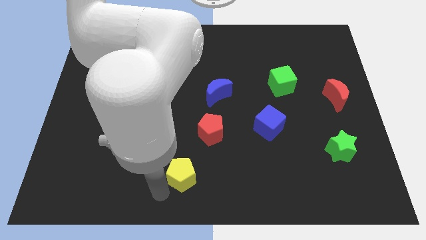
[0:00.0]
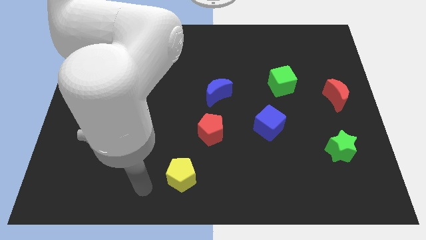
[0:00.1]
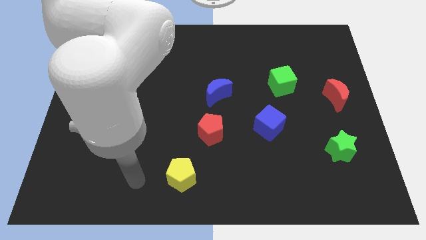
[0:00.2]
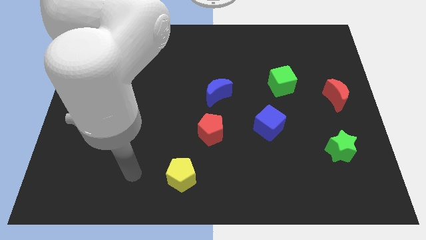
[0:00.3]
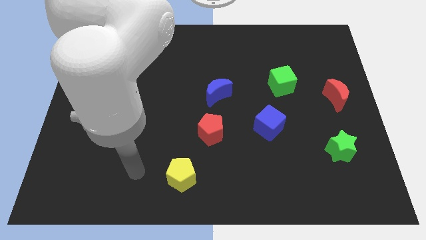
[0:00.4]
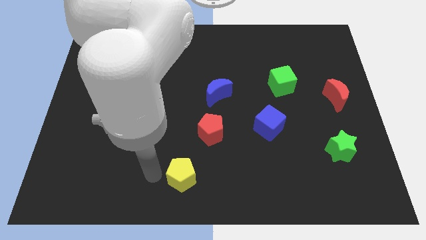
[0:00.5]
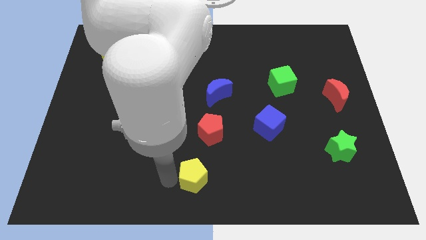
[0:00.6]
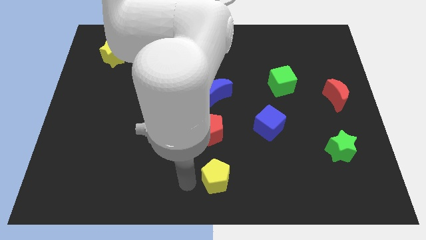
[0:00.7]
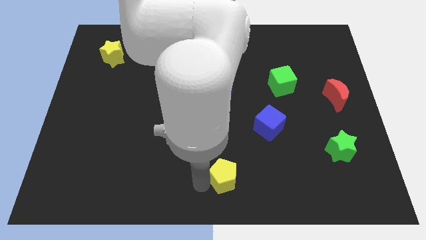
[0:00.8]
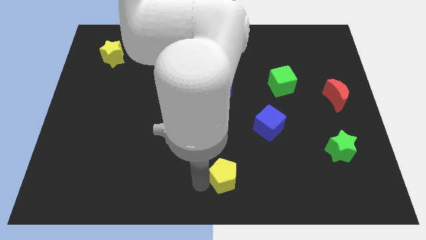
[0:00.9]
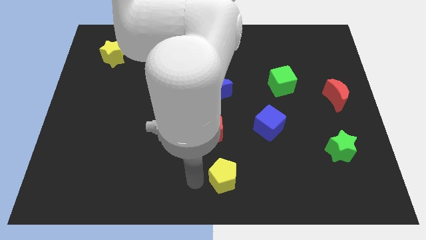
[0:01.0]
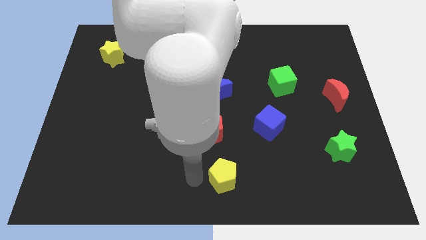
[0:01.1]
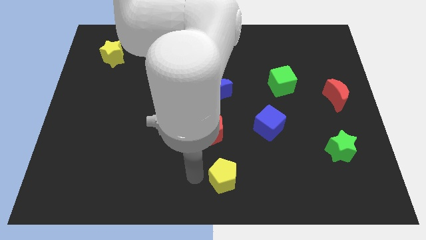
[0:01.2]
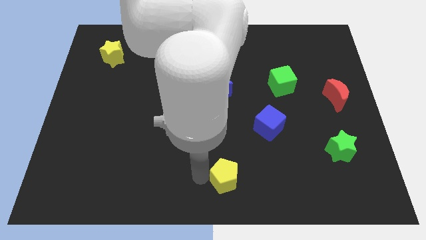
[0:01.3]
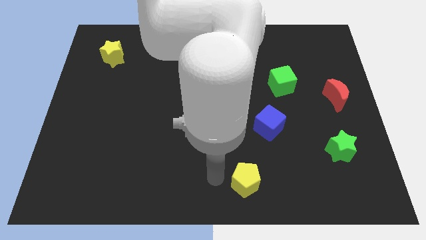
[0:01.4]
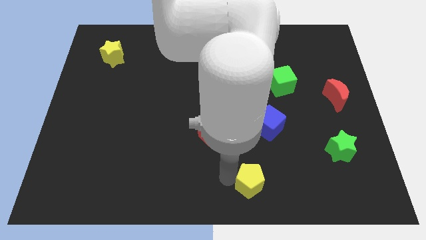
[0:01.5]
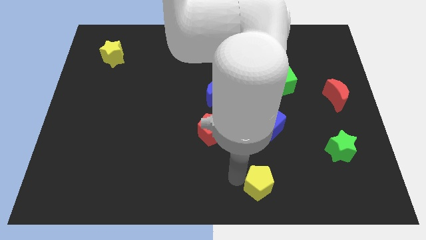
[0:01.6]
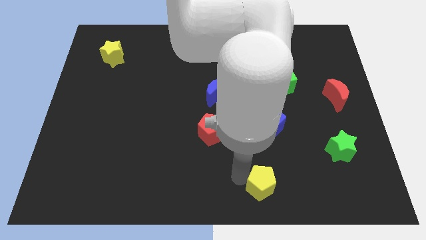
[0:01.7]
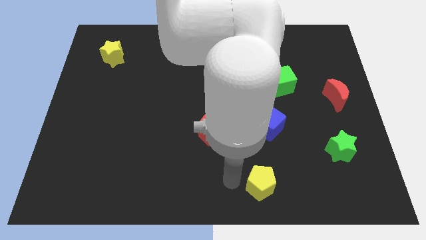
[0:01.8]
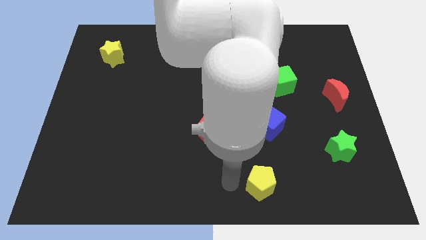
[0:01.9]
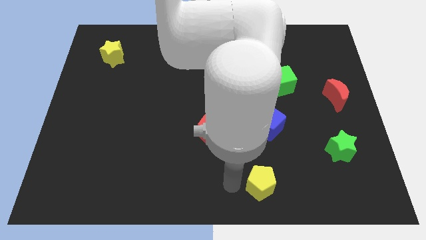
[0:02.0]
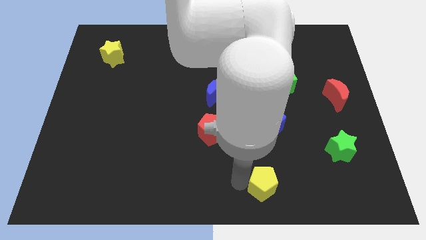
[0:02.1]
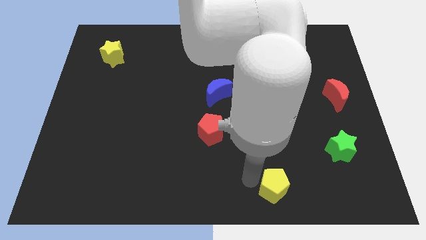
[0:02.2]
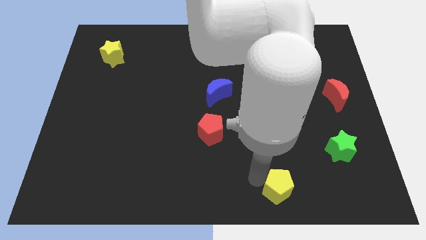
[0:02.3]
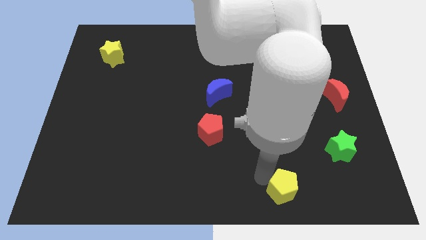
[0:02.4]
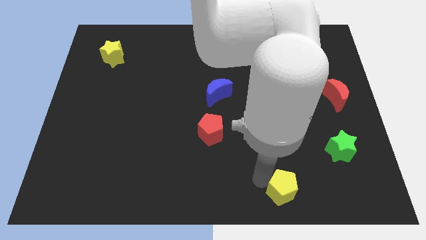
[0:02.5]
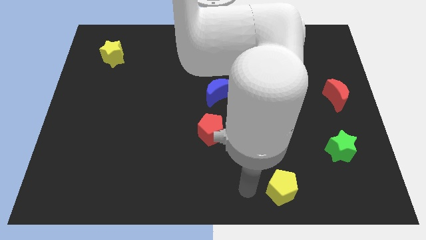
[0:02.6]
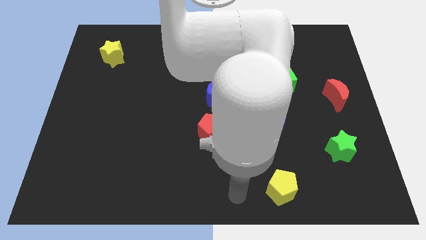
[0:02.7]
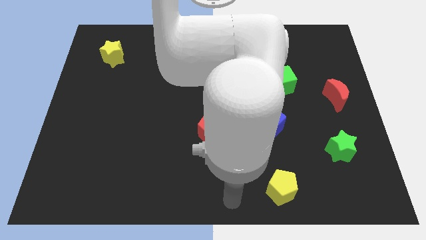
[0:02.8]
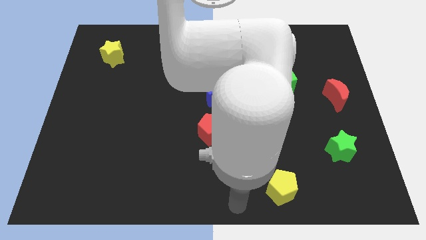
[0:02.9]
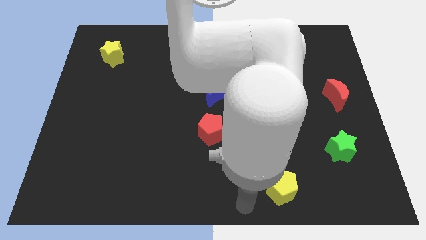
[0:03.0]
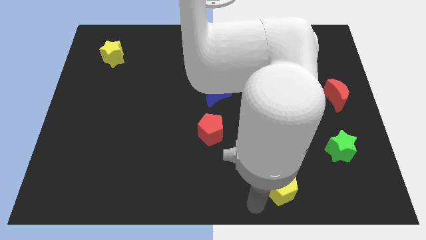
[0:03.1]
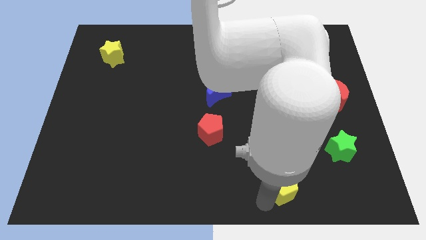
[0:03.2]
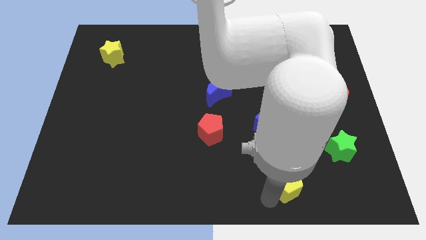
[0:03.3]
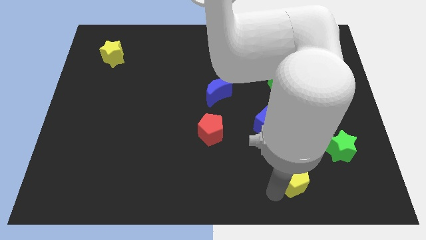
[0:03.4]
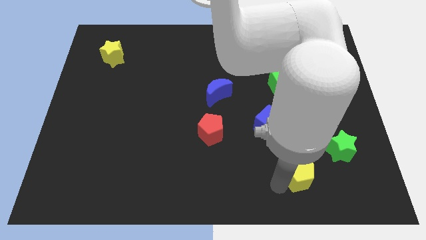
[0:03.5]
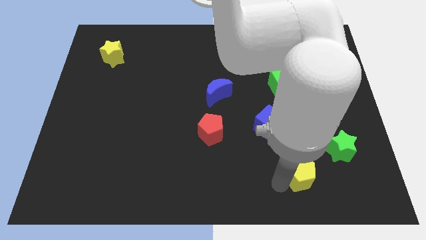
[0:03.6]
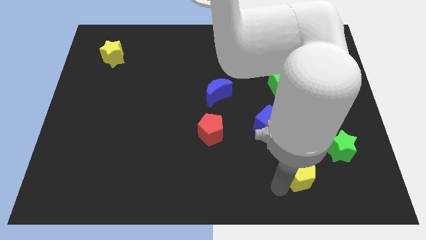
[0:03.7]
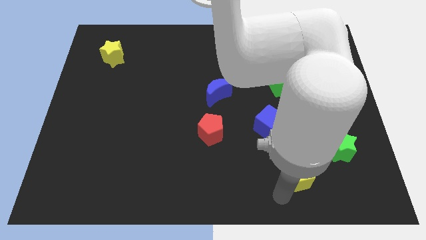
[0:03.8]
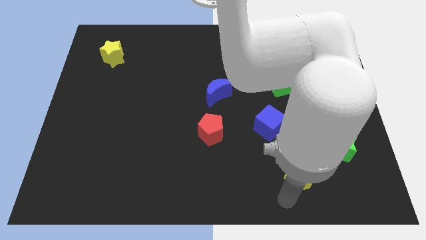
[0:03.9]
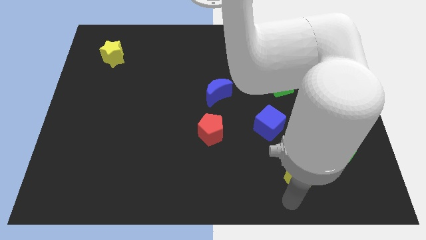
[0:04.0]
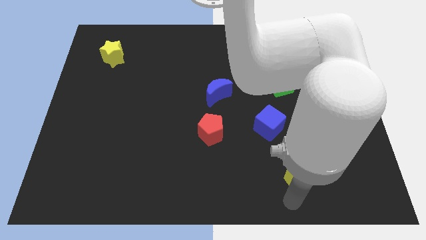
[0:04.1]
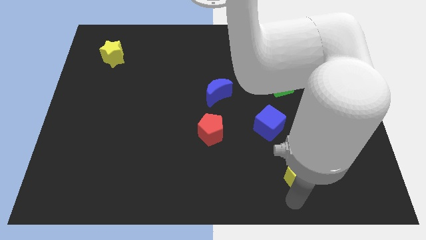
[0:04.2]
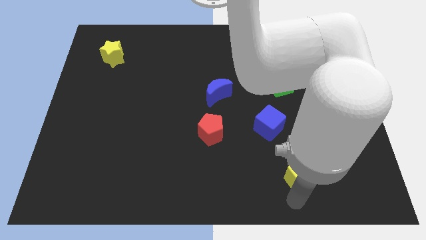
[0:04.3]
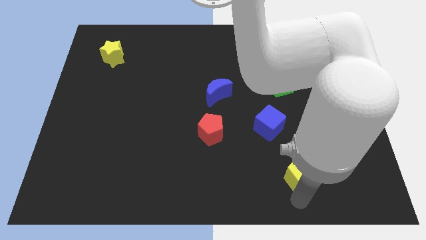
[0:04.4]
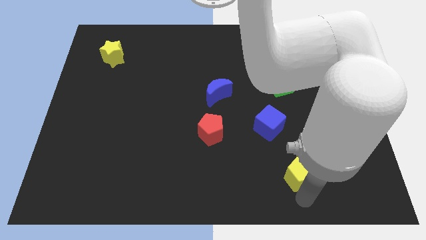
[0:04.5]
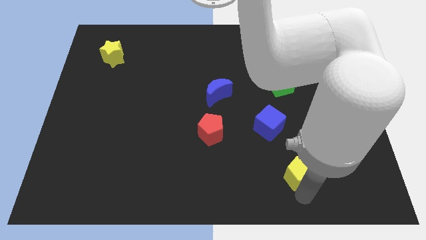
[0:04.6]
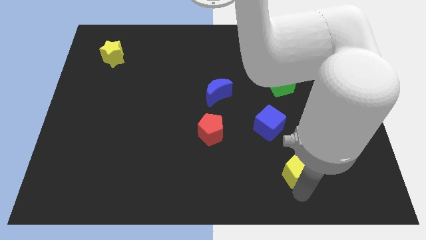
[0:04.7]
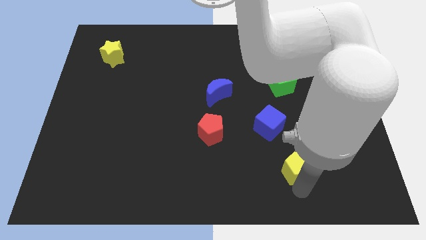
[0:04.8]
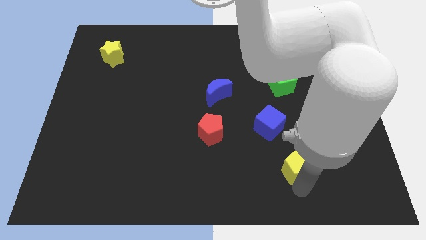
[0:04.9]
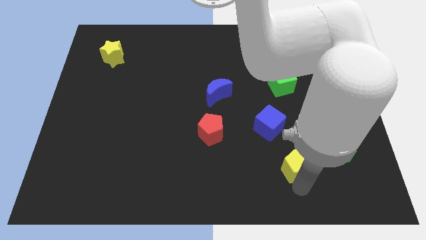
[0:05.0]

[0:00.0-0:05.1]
slide yellow pentagon to bottom right of blue cube

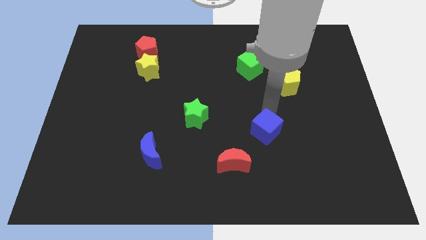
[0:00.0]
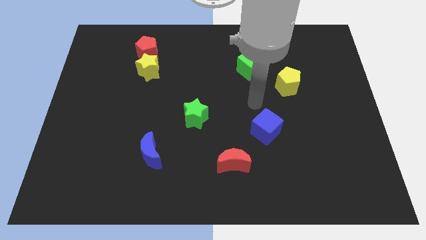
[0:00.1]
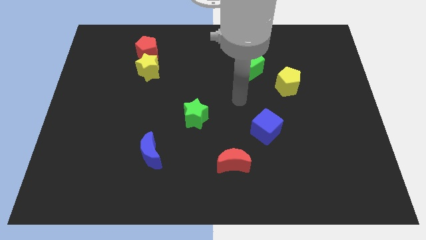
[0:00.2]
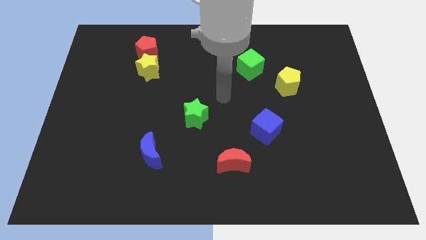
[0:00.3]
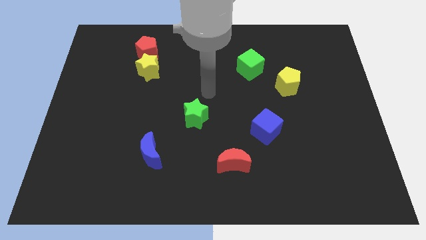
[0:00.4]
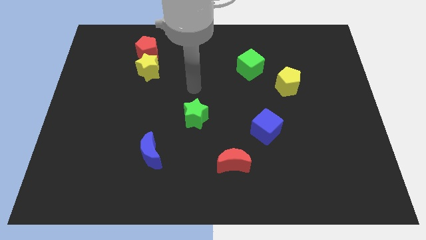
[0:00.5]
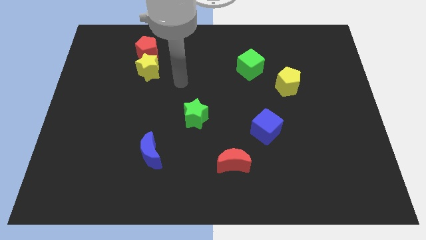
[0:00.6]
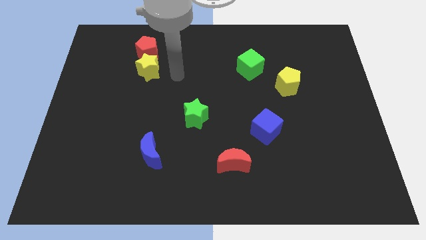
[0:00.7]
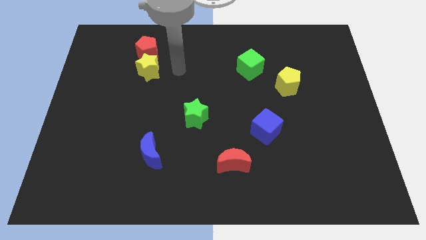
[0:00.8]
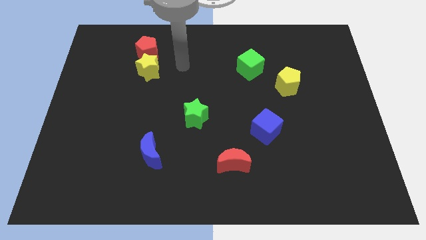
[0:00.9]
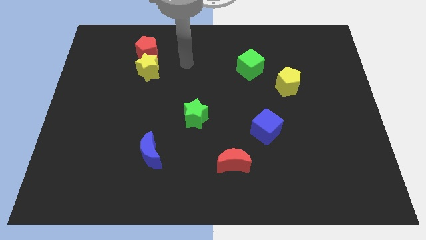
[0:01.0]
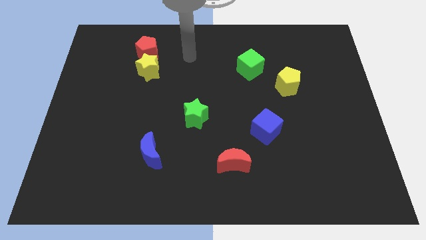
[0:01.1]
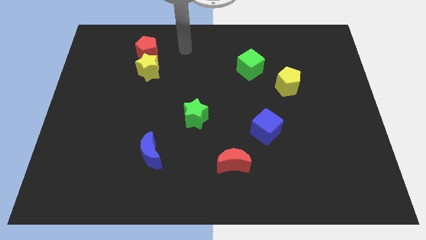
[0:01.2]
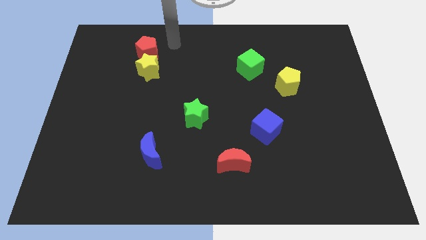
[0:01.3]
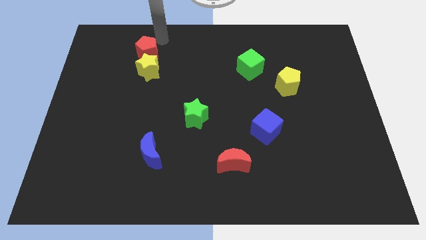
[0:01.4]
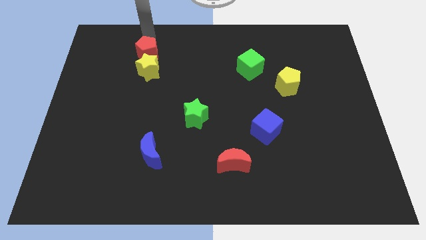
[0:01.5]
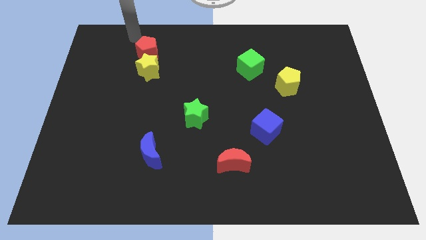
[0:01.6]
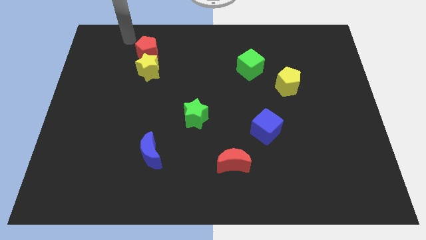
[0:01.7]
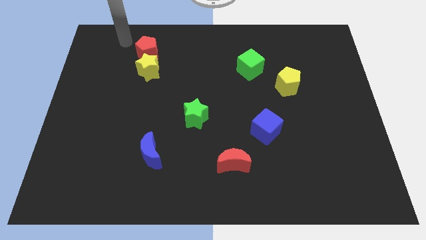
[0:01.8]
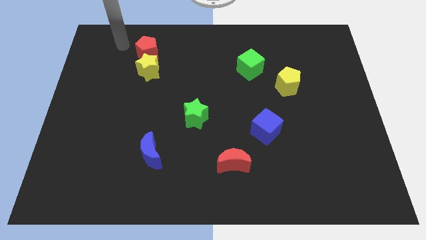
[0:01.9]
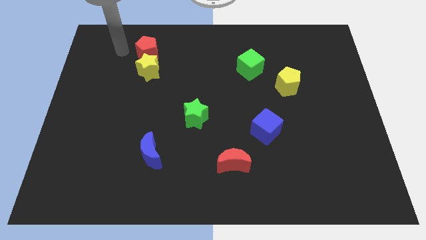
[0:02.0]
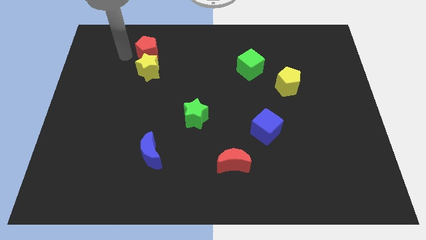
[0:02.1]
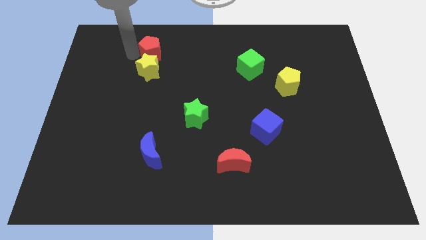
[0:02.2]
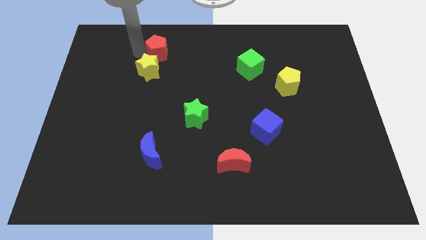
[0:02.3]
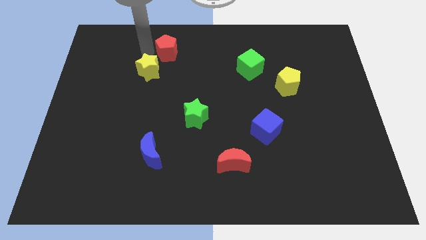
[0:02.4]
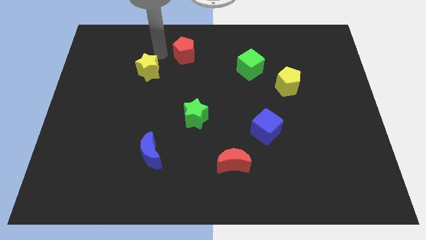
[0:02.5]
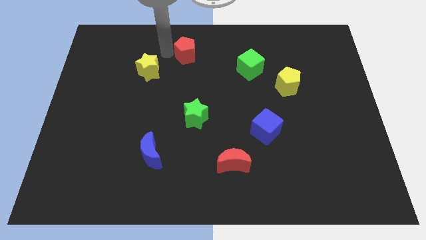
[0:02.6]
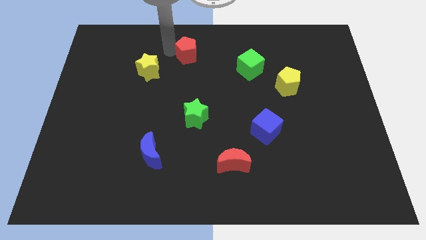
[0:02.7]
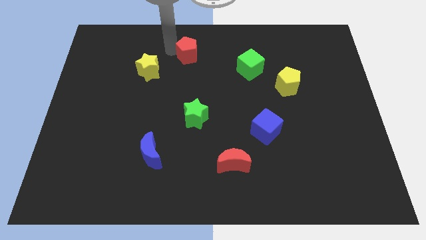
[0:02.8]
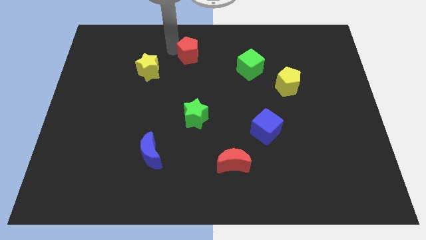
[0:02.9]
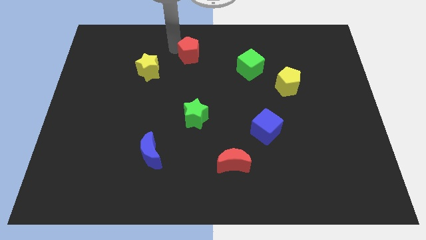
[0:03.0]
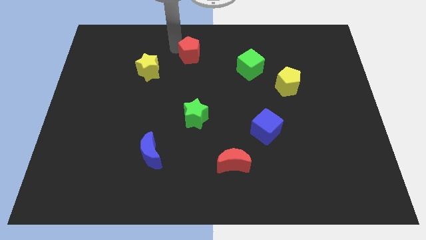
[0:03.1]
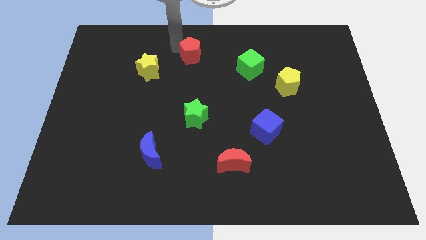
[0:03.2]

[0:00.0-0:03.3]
push the red pentagon to the top of the green star

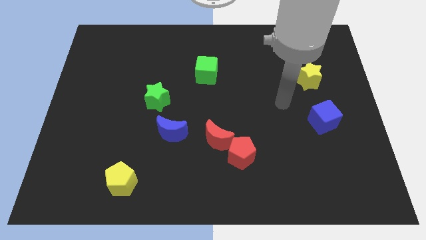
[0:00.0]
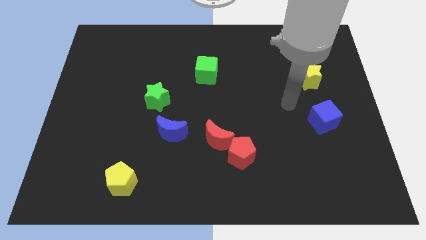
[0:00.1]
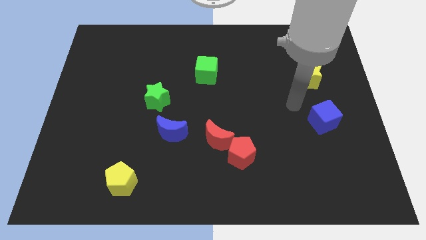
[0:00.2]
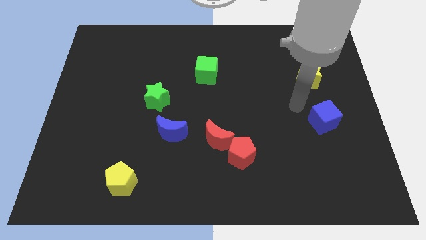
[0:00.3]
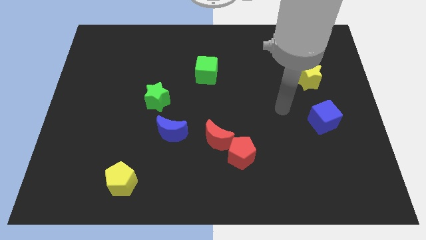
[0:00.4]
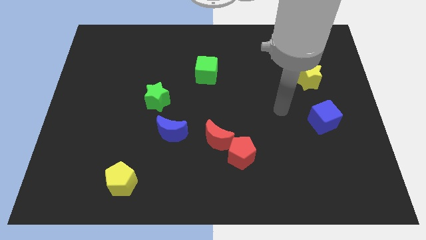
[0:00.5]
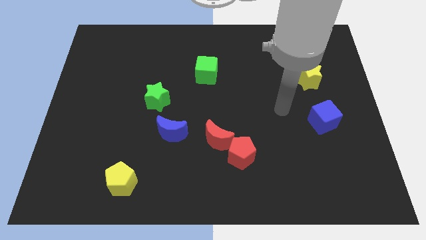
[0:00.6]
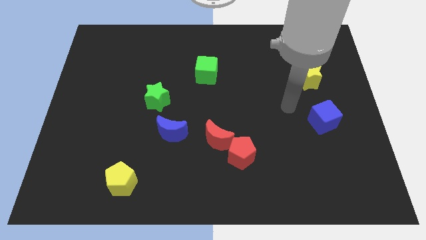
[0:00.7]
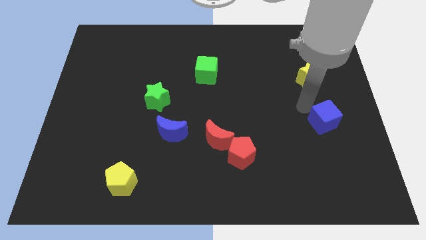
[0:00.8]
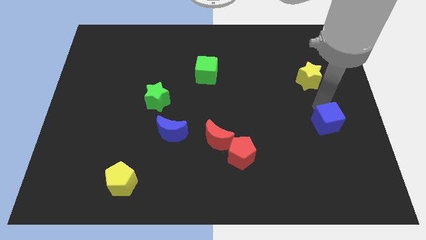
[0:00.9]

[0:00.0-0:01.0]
move your arm in between yellow star and blue cube
